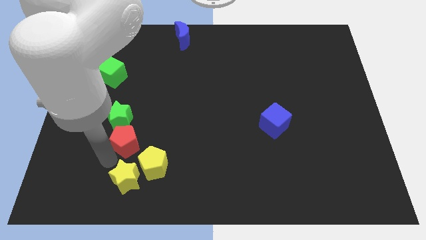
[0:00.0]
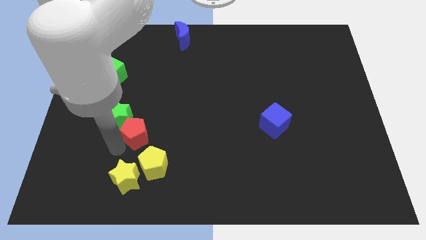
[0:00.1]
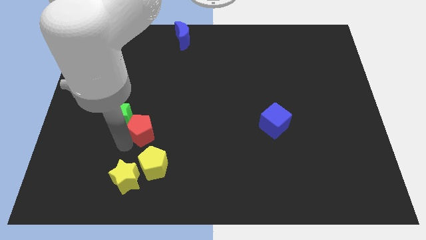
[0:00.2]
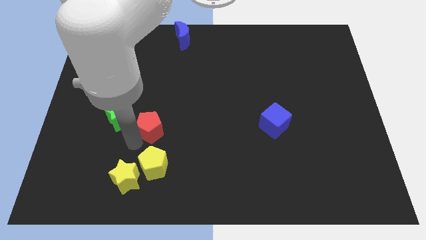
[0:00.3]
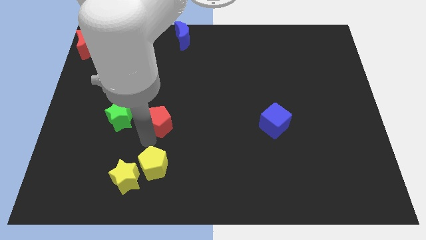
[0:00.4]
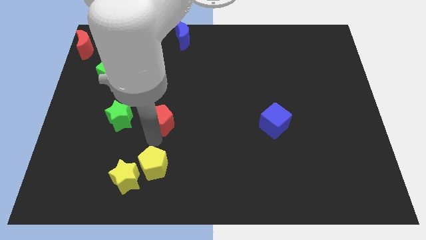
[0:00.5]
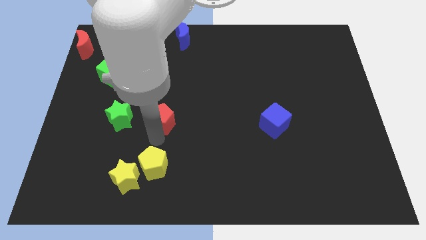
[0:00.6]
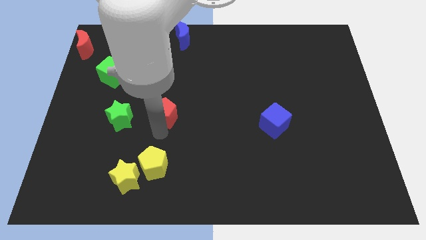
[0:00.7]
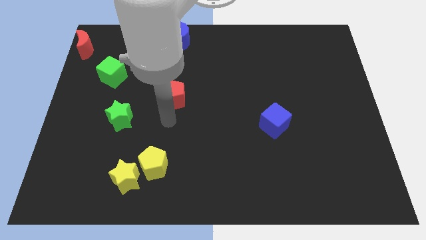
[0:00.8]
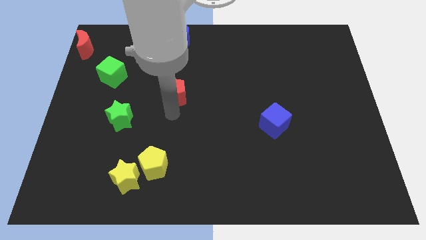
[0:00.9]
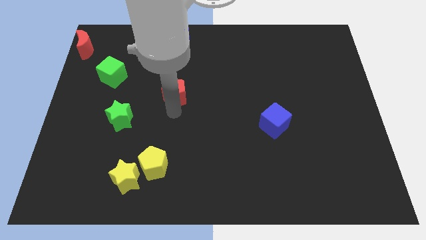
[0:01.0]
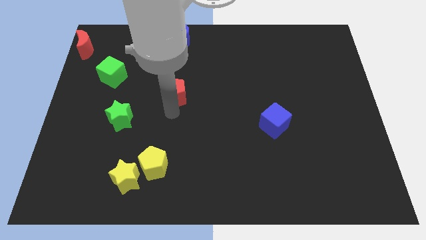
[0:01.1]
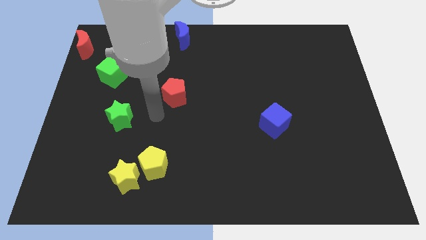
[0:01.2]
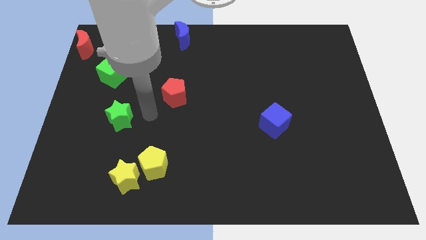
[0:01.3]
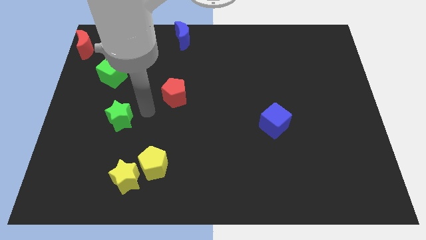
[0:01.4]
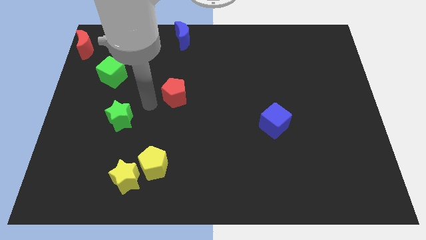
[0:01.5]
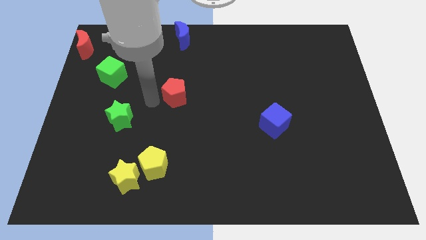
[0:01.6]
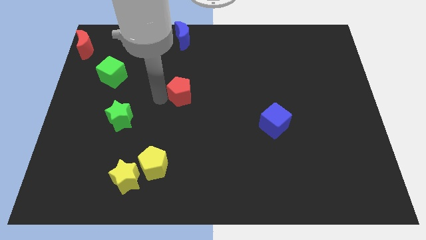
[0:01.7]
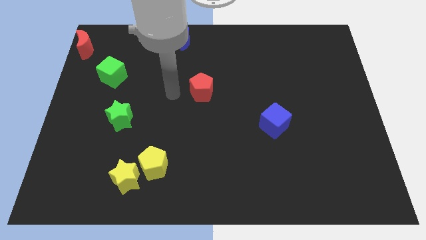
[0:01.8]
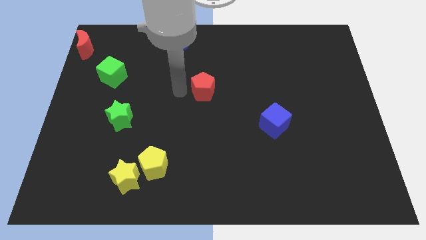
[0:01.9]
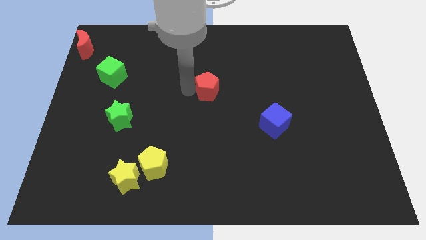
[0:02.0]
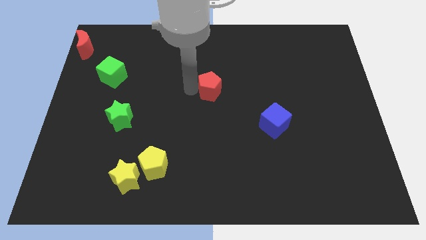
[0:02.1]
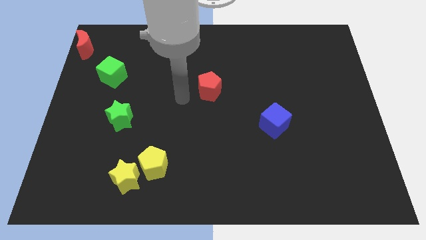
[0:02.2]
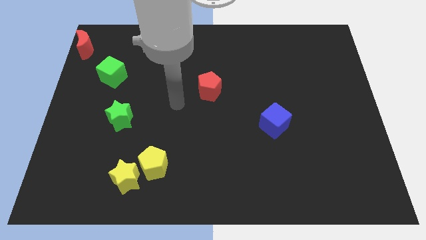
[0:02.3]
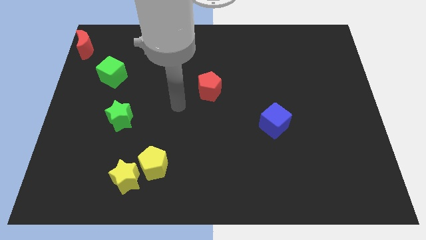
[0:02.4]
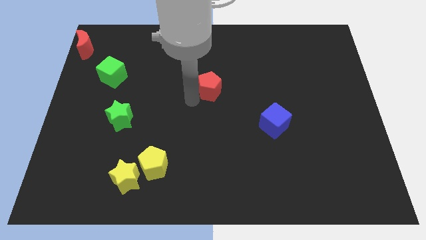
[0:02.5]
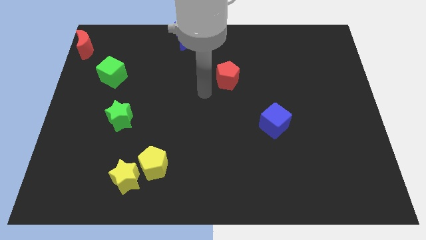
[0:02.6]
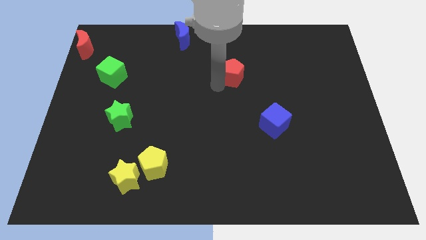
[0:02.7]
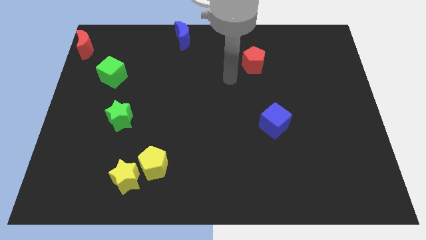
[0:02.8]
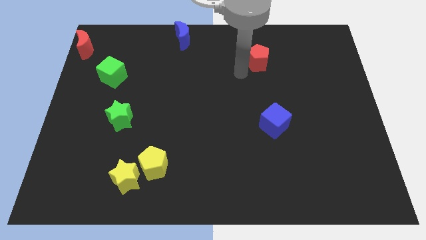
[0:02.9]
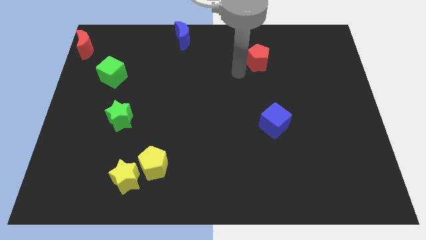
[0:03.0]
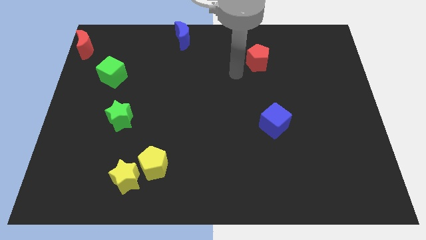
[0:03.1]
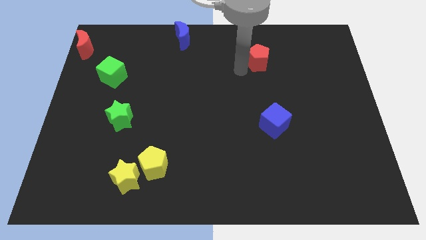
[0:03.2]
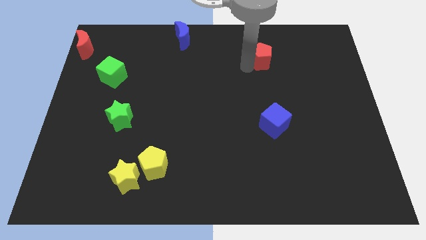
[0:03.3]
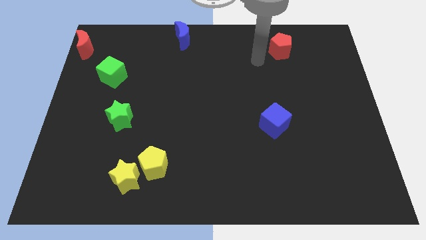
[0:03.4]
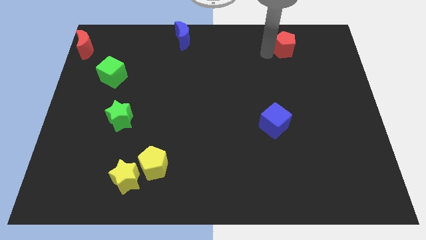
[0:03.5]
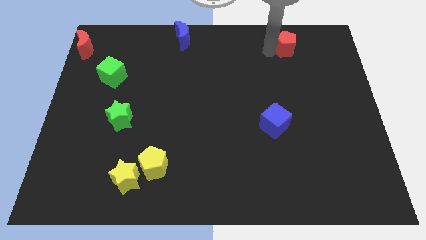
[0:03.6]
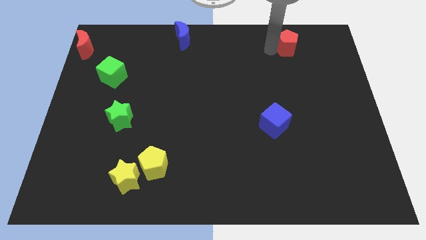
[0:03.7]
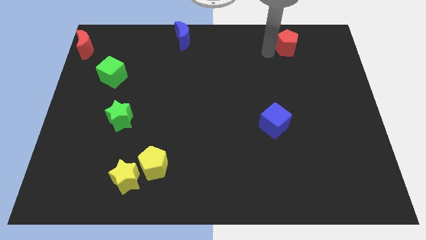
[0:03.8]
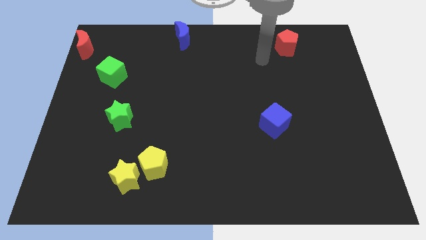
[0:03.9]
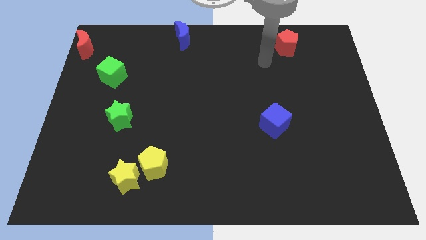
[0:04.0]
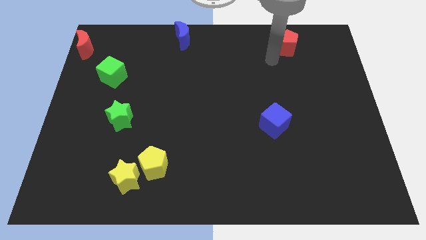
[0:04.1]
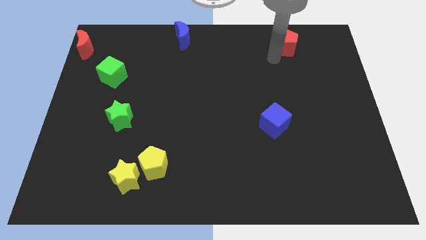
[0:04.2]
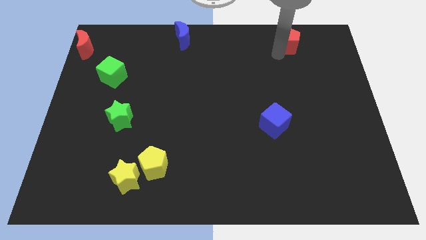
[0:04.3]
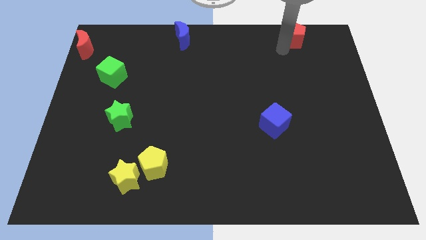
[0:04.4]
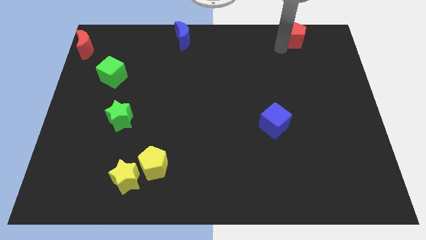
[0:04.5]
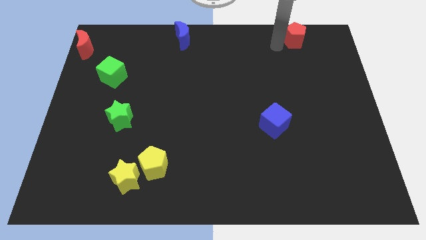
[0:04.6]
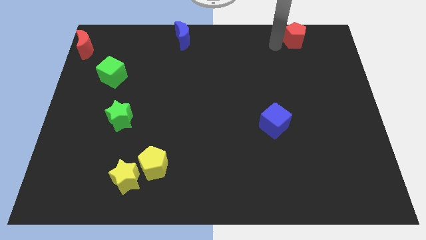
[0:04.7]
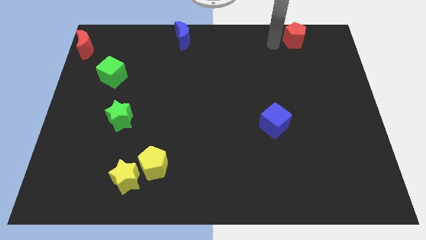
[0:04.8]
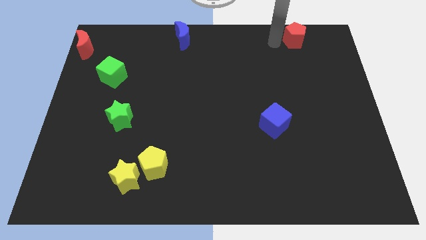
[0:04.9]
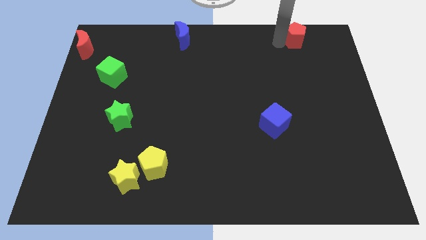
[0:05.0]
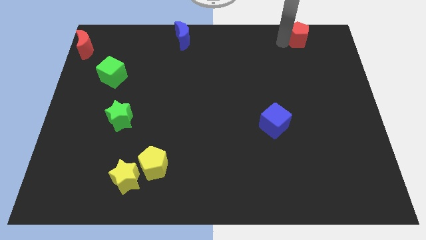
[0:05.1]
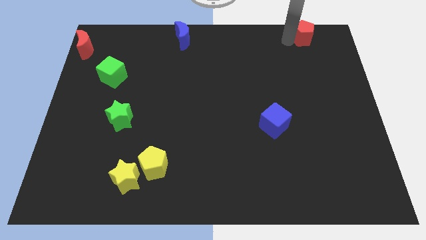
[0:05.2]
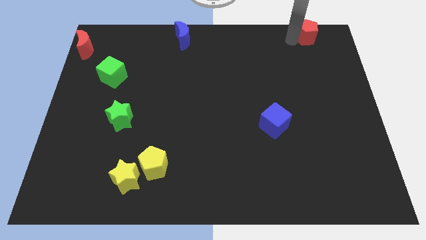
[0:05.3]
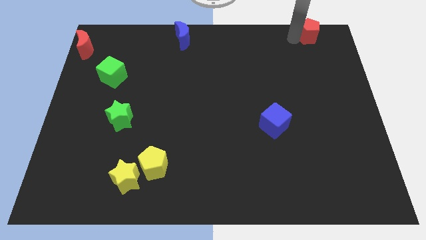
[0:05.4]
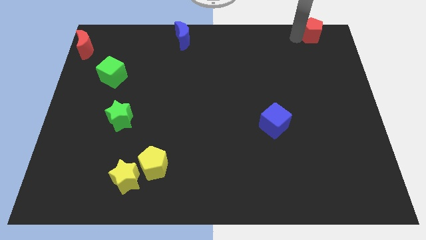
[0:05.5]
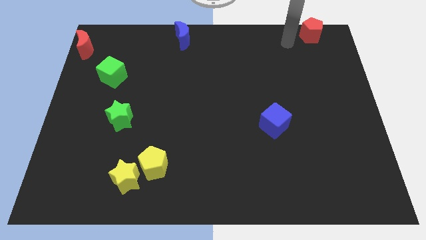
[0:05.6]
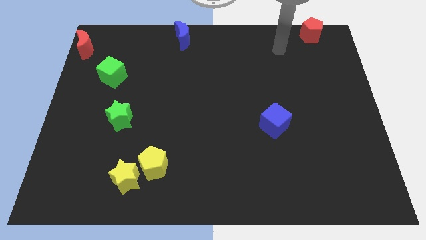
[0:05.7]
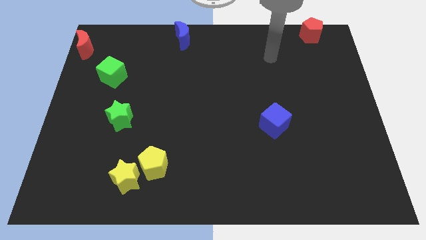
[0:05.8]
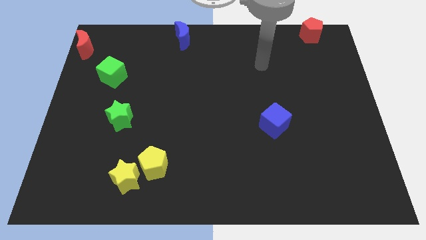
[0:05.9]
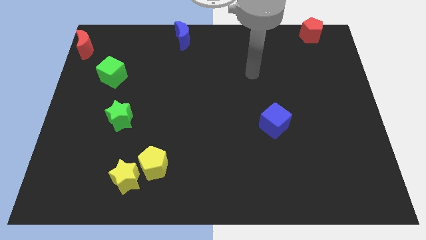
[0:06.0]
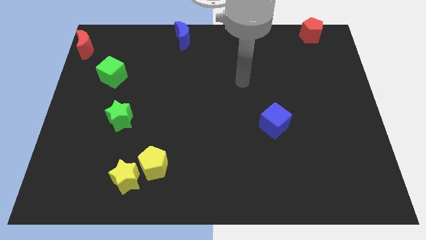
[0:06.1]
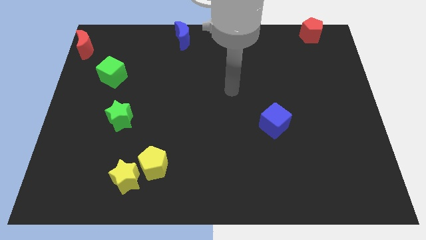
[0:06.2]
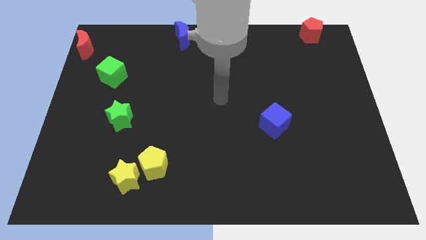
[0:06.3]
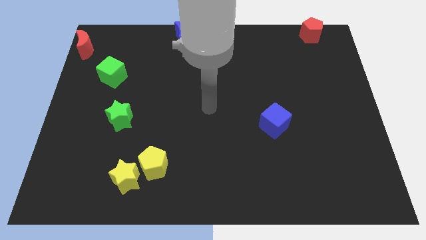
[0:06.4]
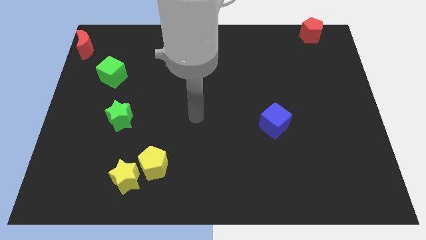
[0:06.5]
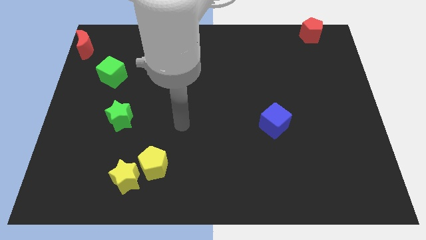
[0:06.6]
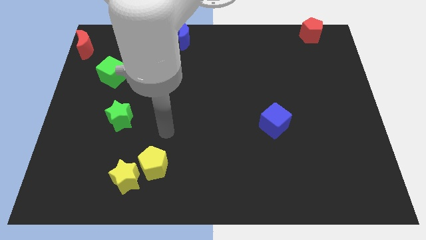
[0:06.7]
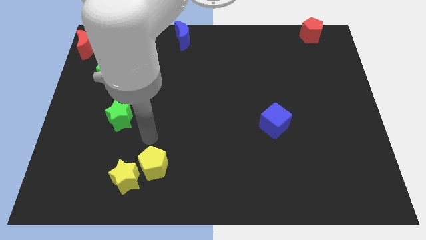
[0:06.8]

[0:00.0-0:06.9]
place the red pentagon above the blue cube

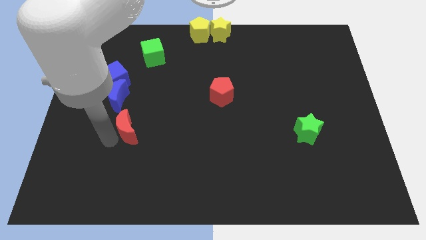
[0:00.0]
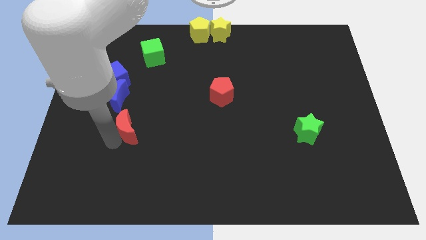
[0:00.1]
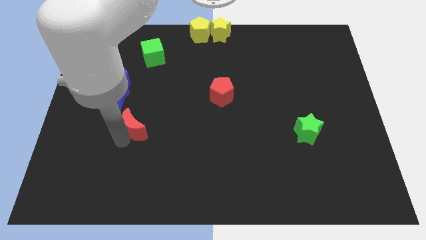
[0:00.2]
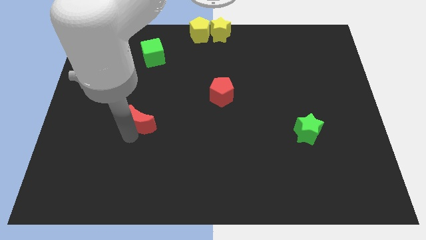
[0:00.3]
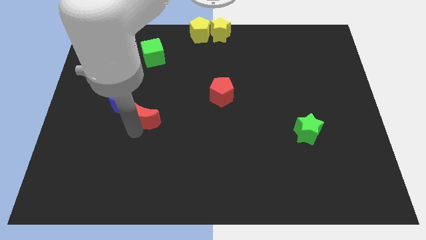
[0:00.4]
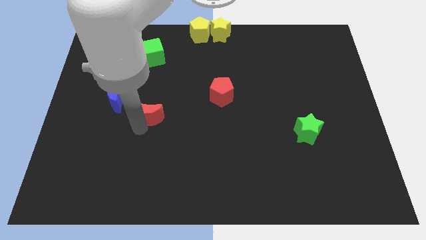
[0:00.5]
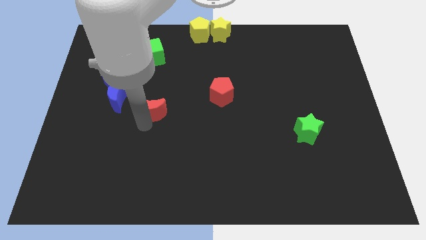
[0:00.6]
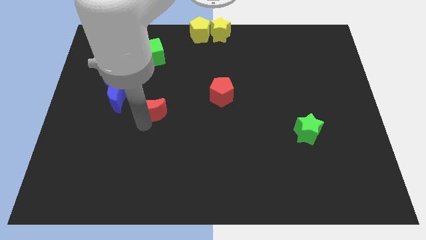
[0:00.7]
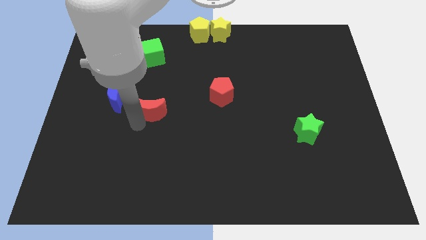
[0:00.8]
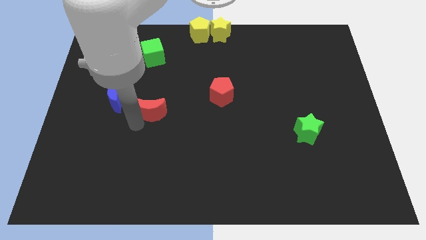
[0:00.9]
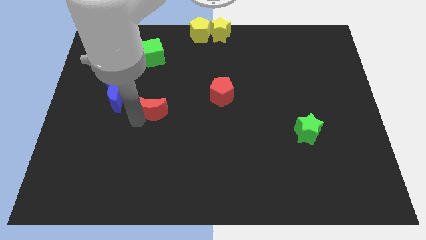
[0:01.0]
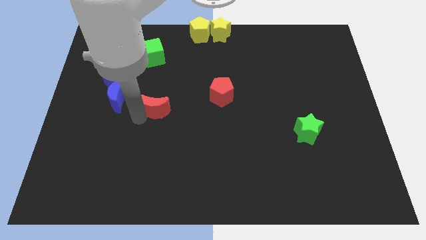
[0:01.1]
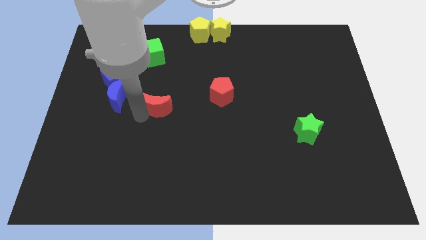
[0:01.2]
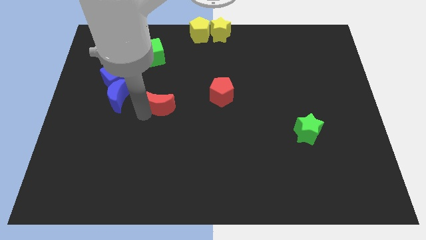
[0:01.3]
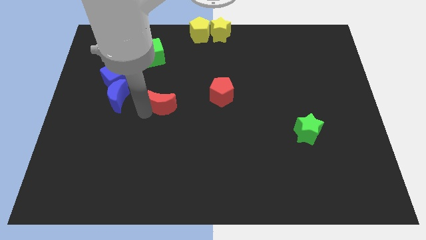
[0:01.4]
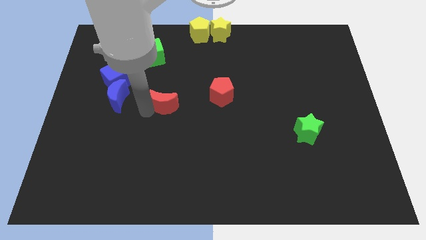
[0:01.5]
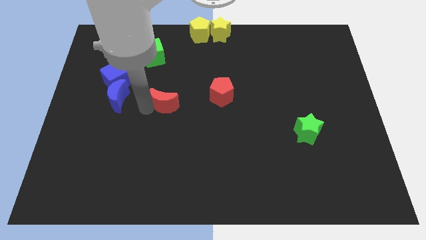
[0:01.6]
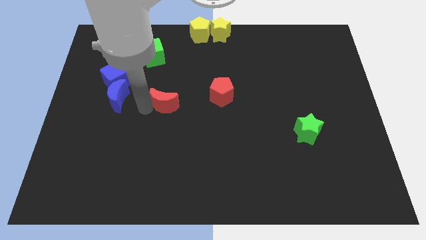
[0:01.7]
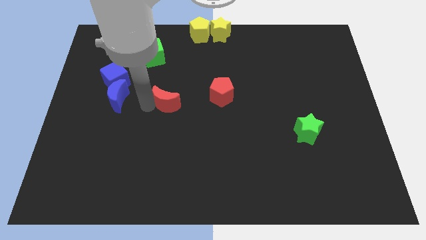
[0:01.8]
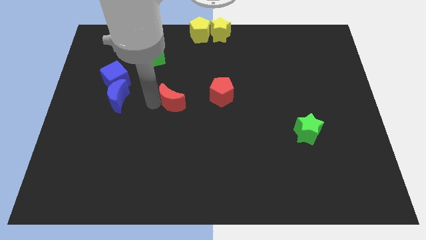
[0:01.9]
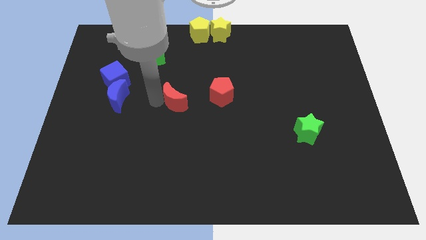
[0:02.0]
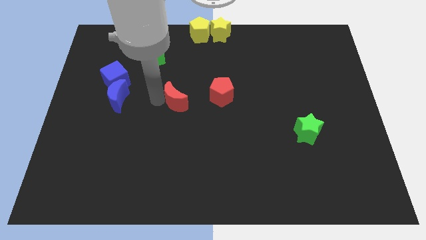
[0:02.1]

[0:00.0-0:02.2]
place the red moon in between the blue moon and red pentagon

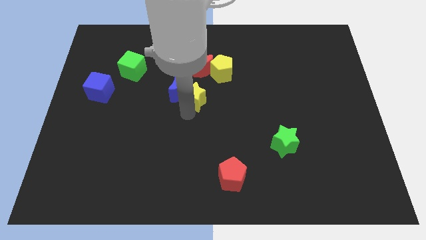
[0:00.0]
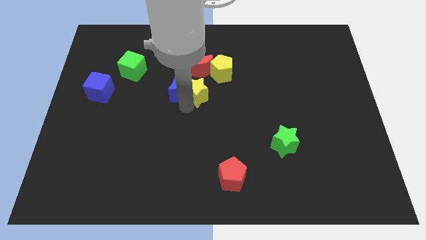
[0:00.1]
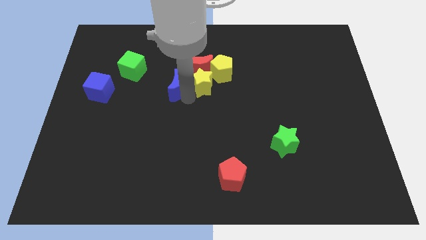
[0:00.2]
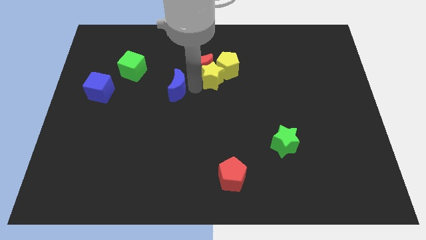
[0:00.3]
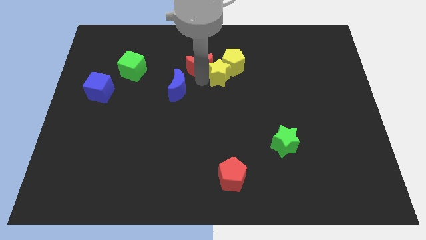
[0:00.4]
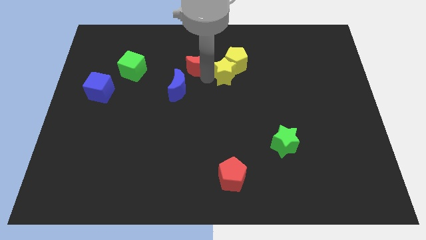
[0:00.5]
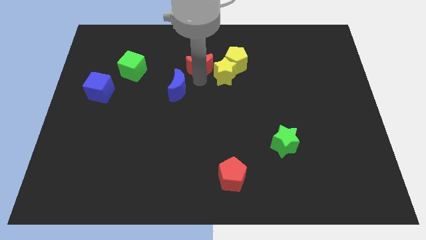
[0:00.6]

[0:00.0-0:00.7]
push the yellow blocks slightly upwards
